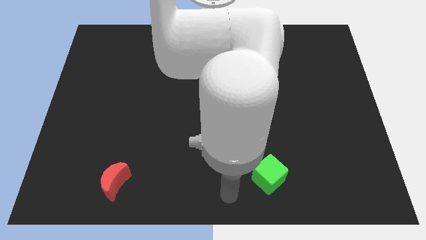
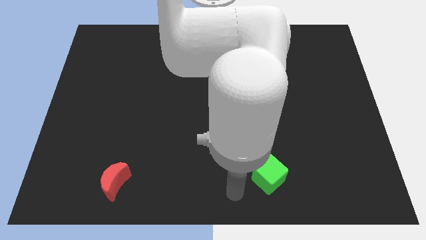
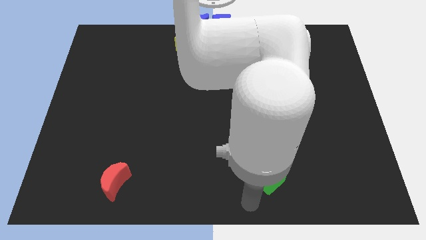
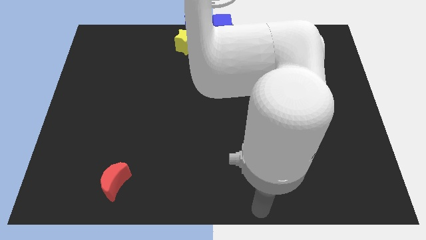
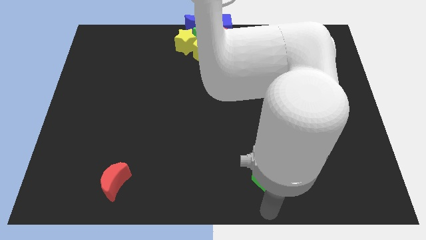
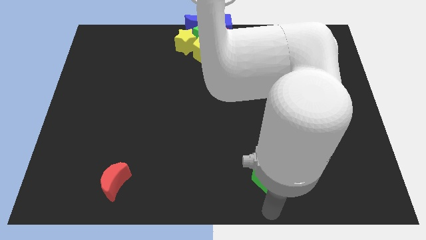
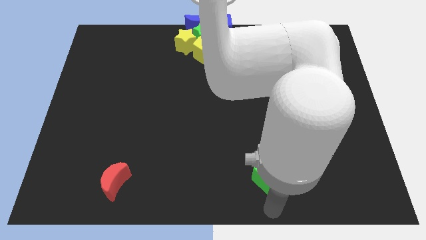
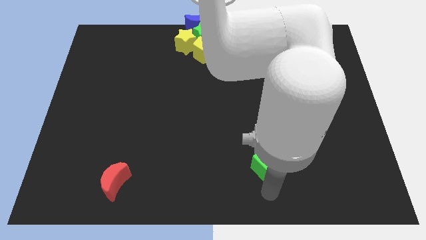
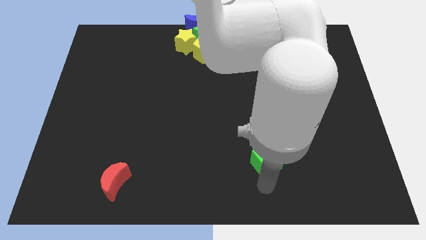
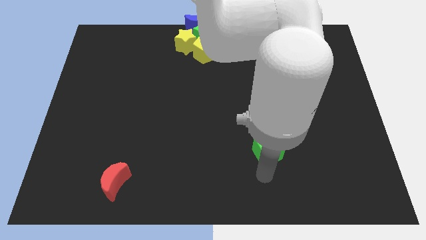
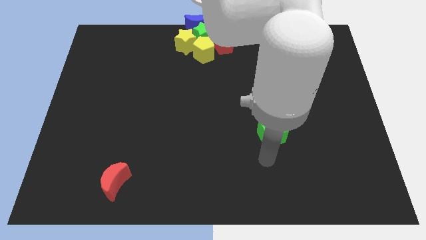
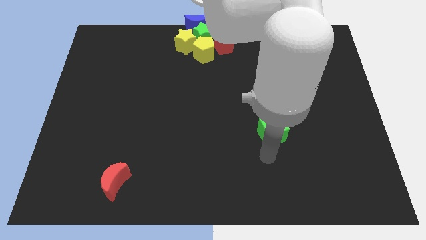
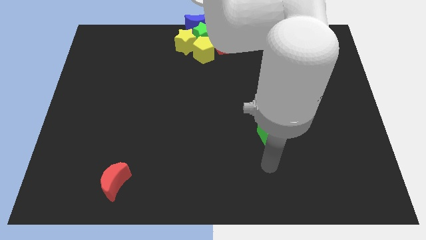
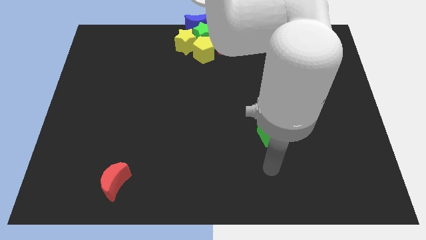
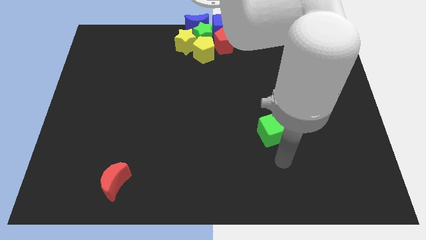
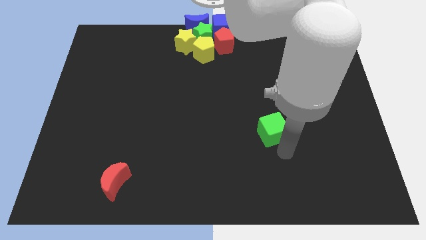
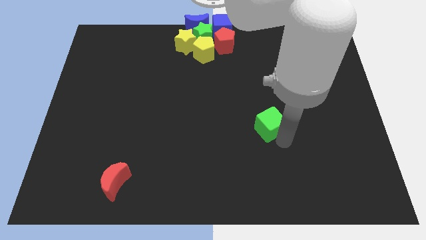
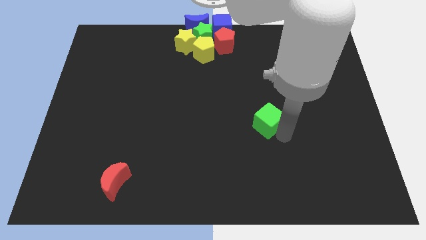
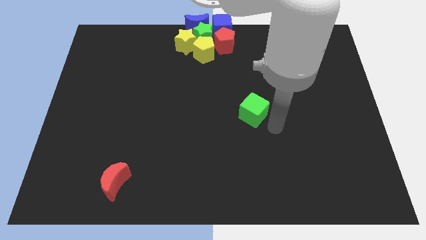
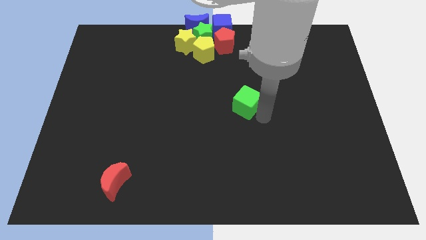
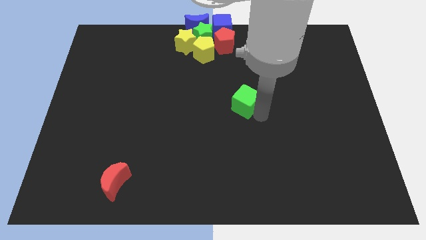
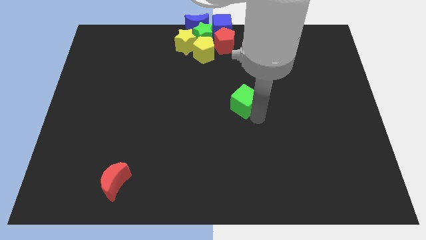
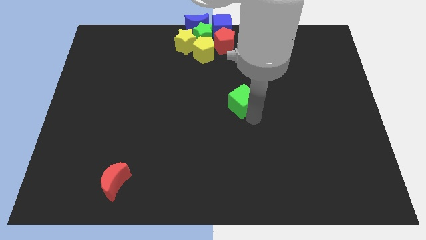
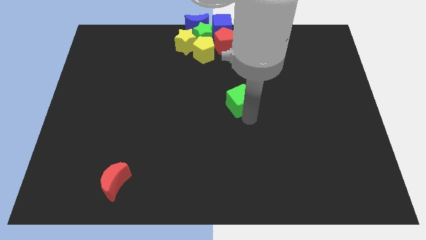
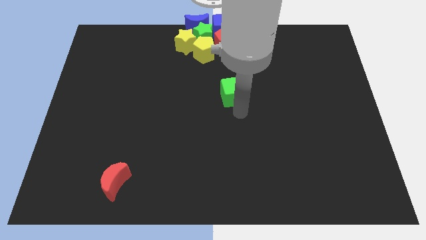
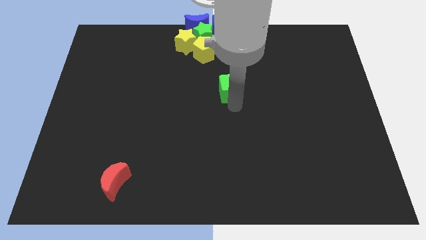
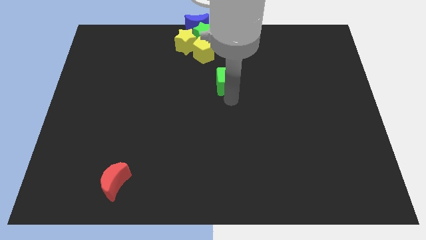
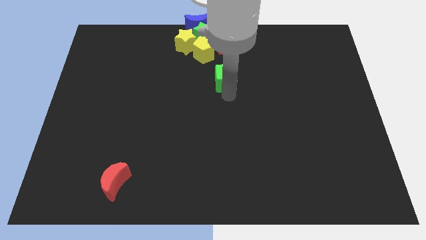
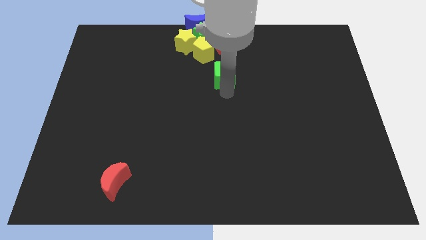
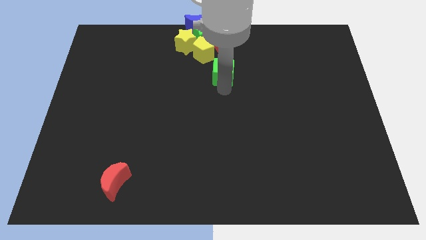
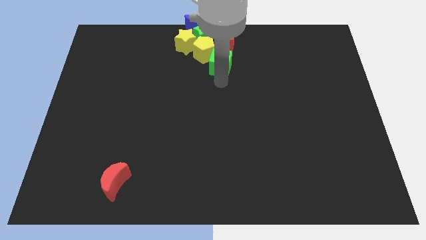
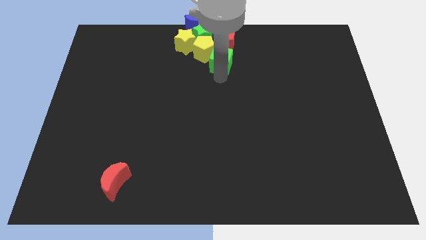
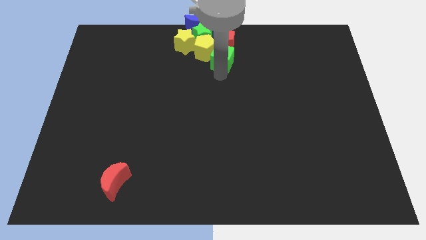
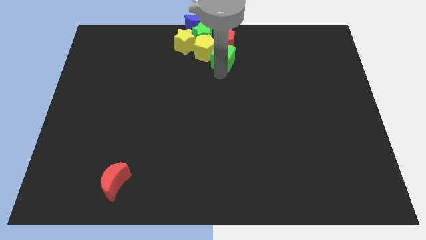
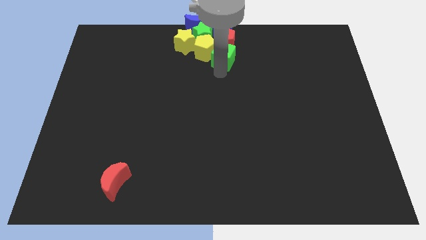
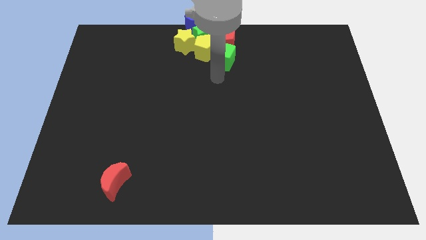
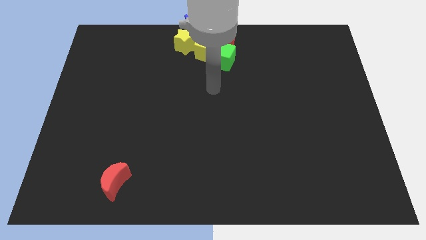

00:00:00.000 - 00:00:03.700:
slide the green cube into the bottom of the red pentagon

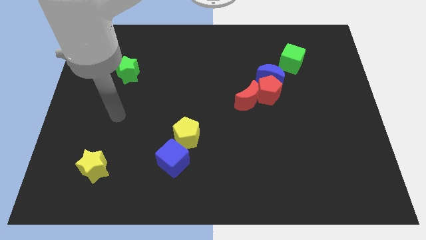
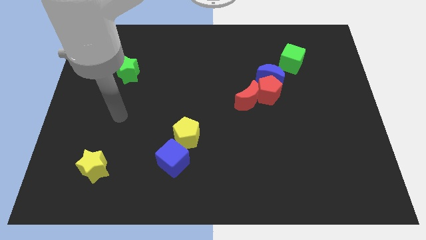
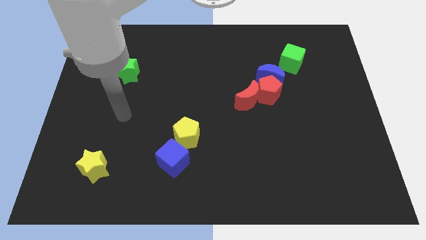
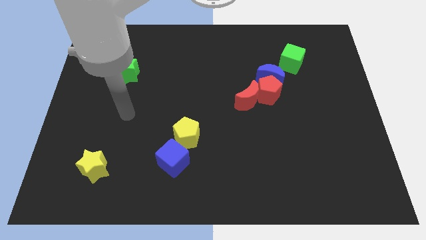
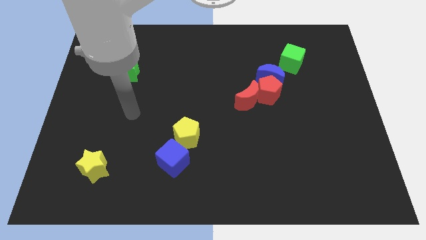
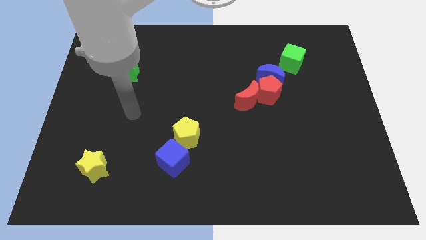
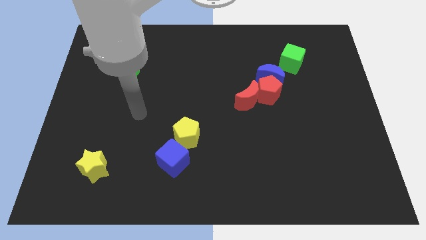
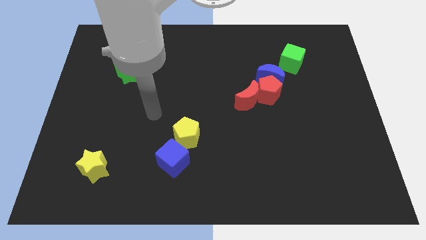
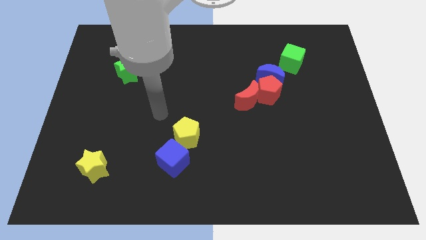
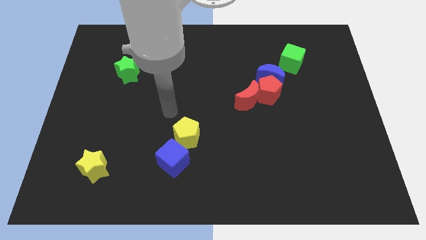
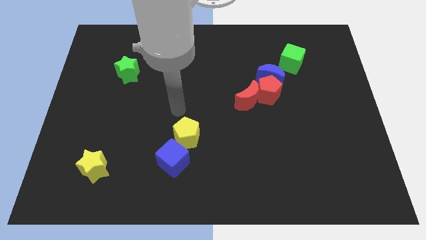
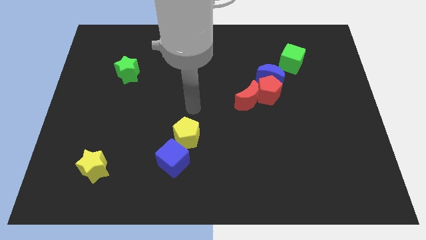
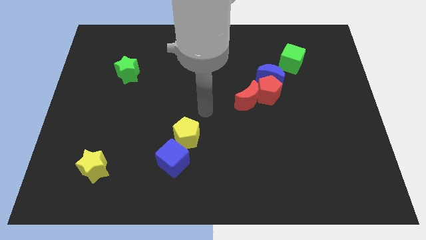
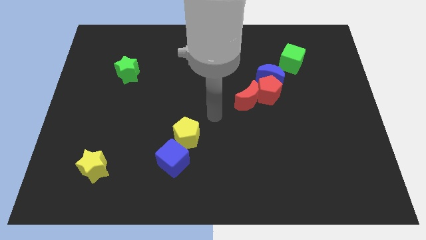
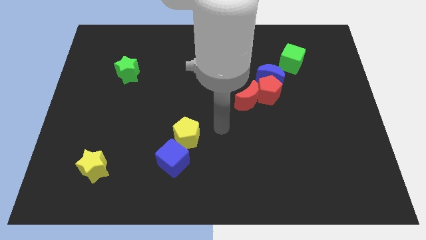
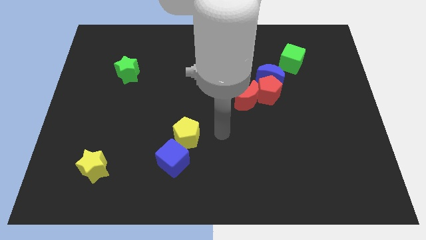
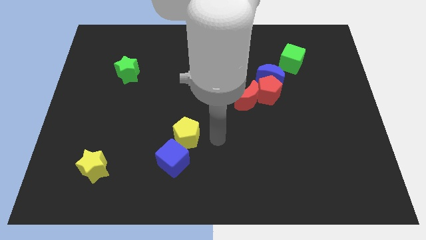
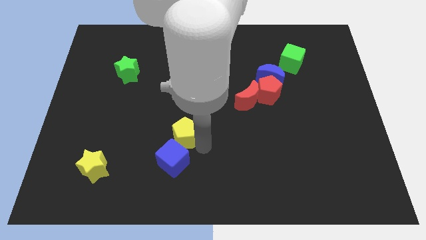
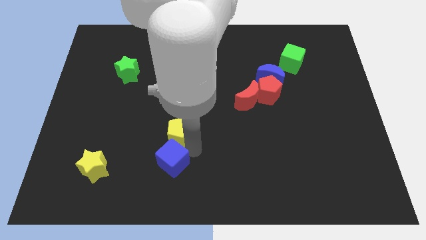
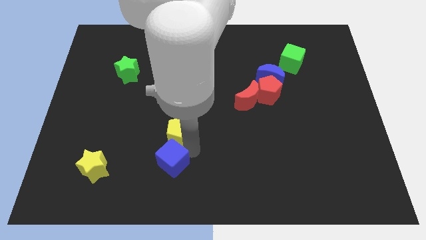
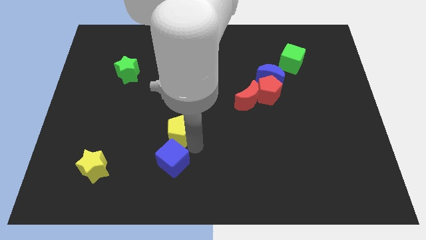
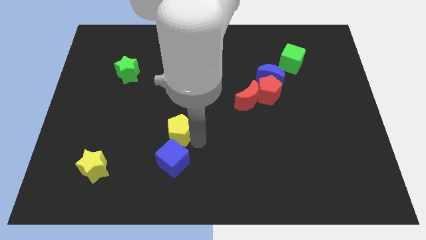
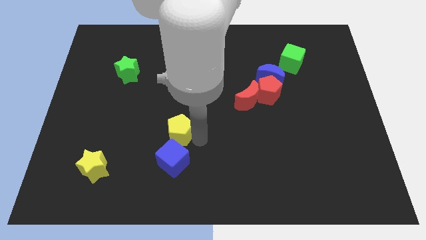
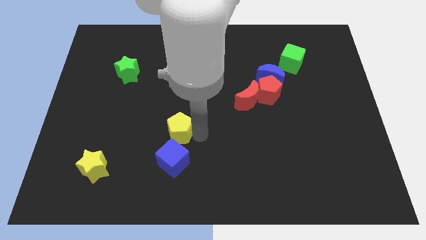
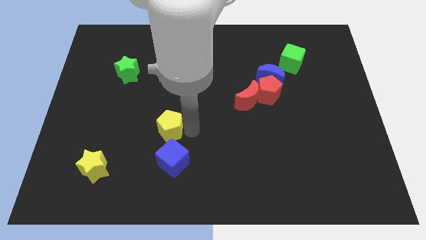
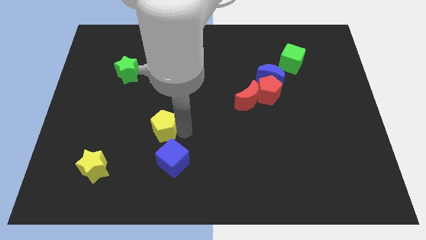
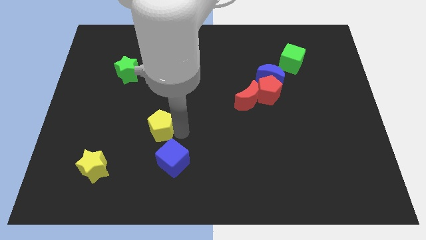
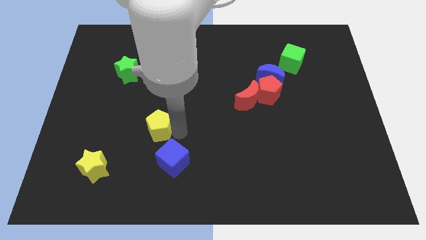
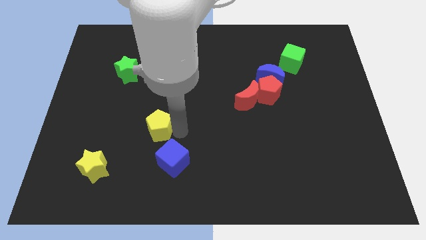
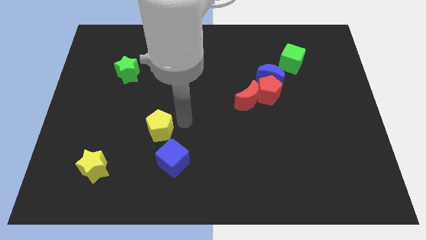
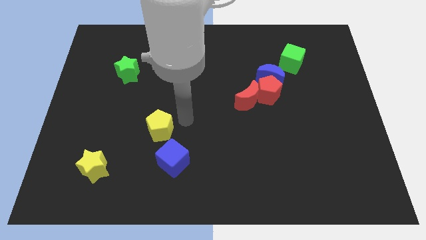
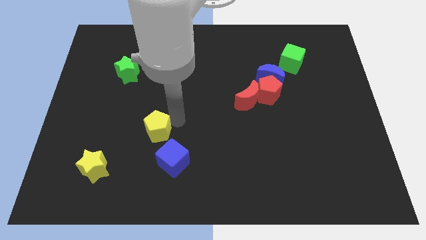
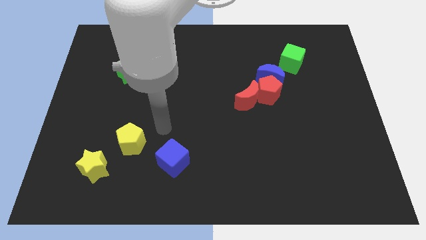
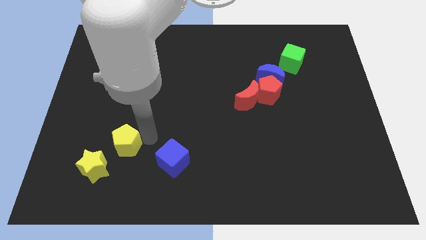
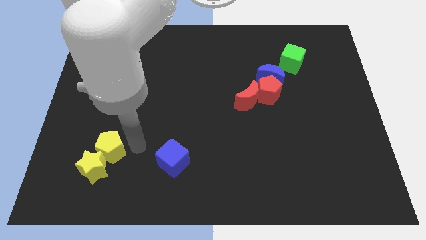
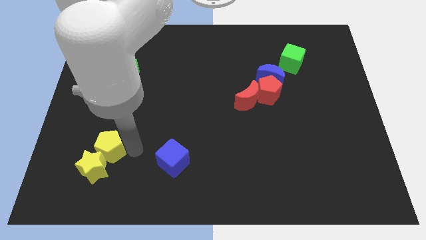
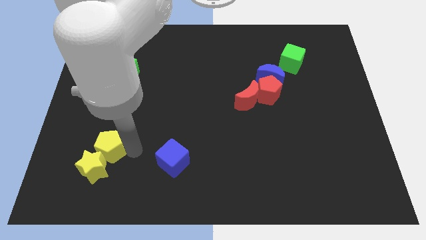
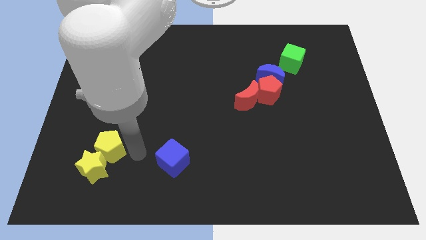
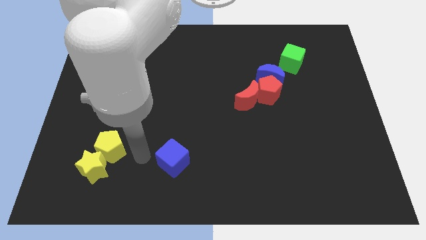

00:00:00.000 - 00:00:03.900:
push the yellow pentagon into the yellow star

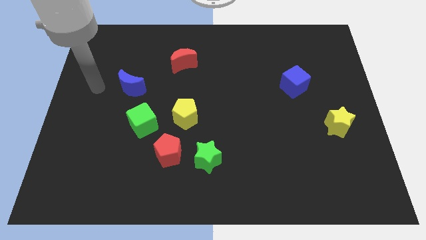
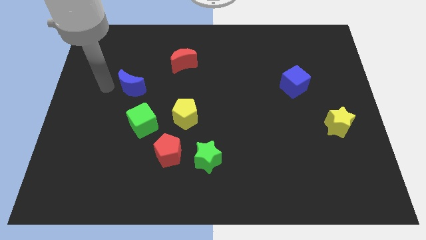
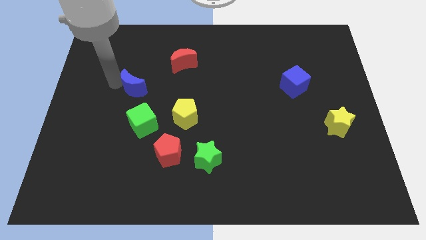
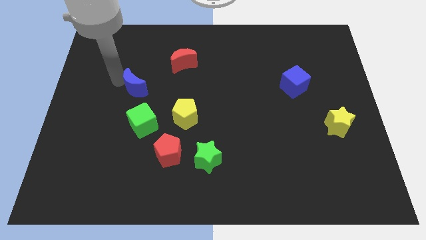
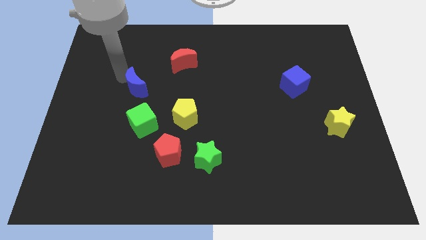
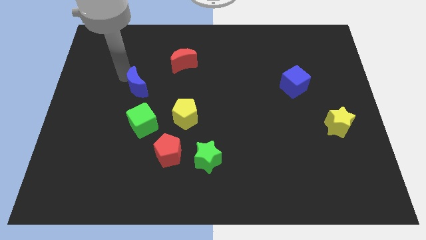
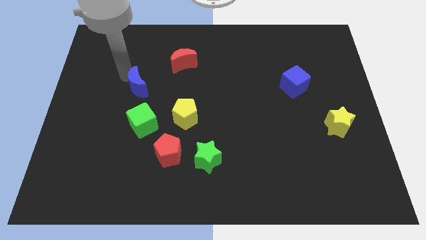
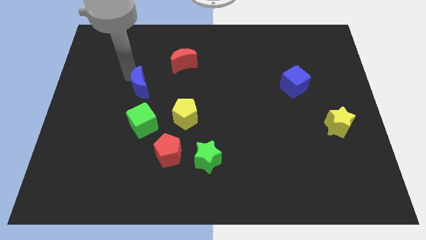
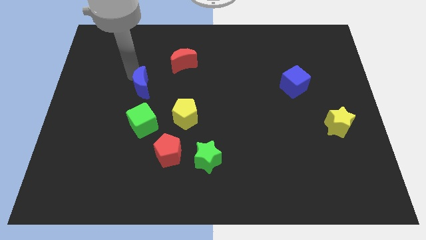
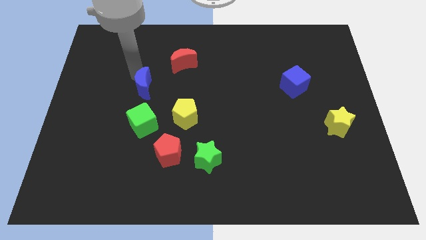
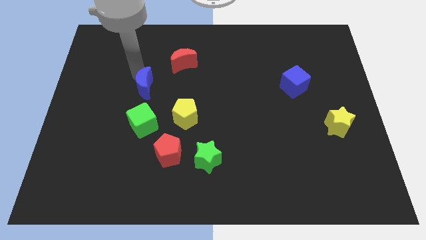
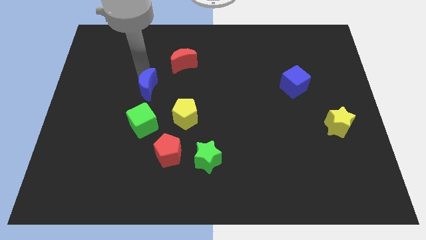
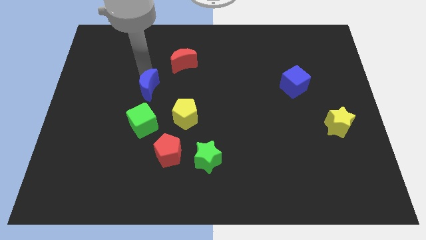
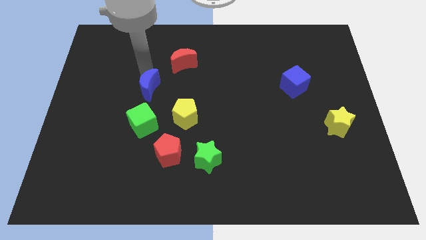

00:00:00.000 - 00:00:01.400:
move the blue crescent slightly to the right
